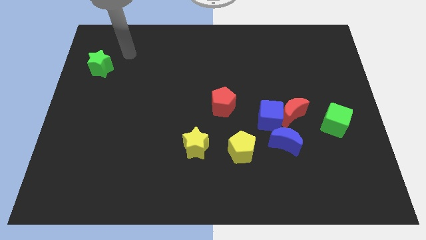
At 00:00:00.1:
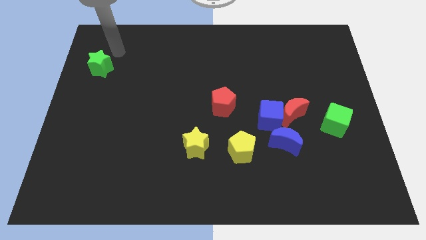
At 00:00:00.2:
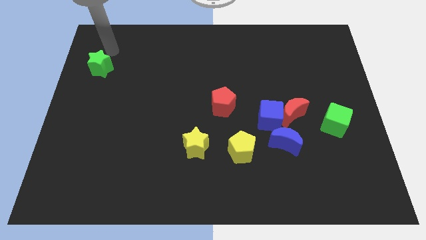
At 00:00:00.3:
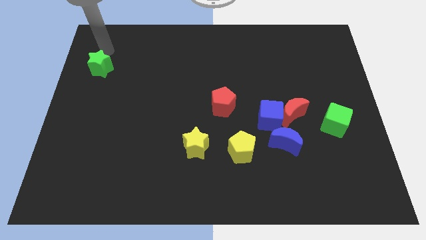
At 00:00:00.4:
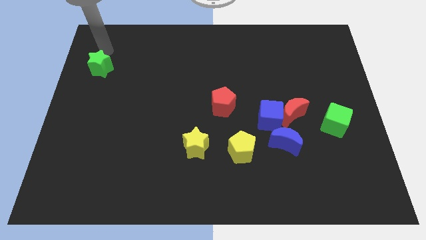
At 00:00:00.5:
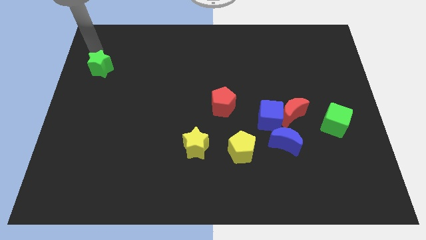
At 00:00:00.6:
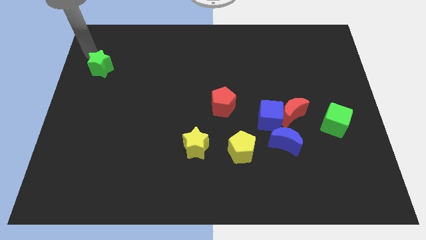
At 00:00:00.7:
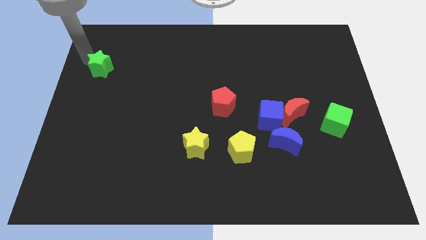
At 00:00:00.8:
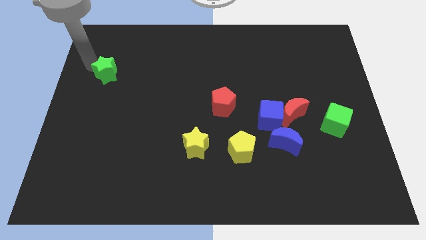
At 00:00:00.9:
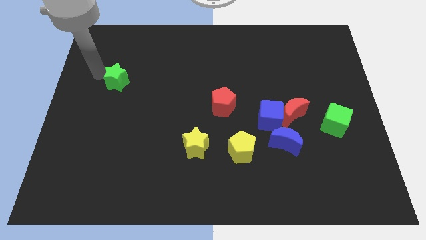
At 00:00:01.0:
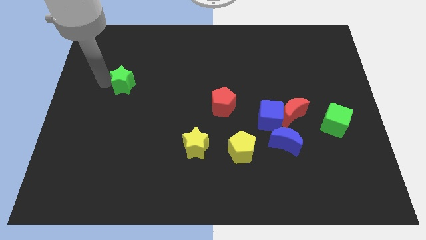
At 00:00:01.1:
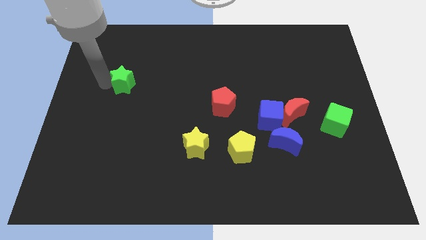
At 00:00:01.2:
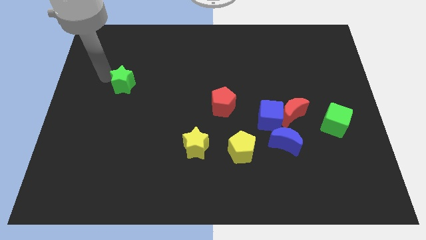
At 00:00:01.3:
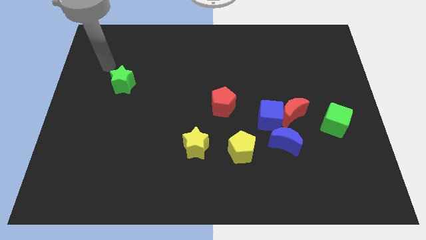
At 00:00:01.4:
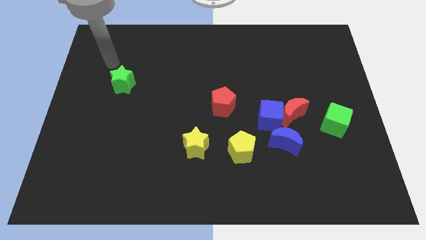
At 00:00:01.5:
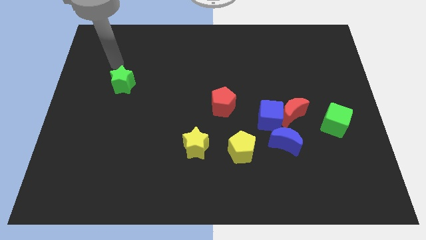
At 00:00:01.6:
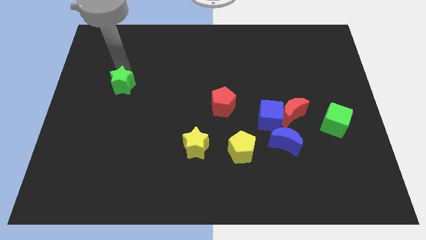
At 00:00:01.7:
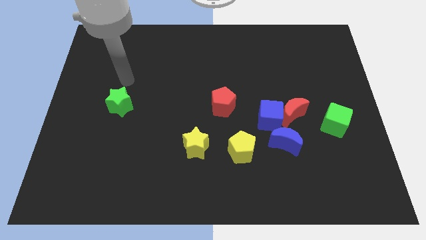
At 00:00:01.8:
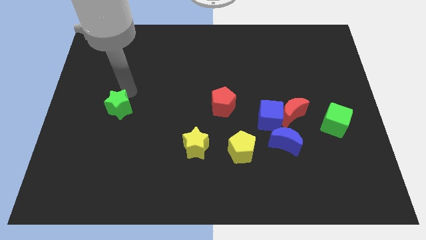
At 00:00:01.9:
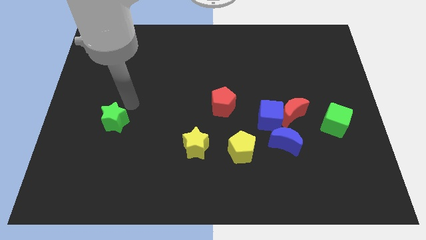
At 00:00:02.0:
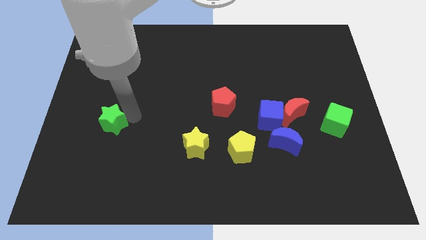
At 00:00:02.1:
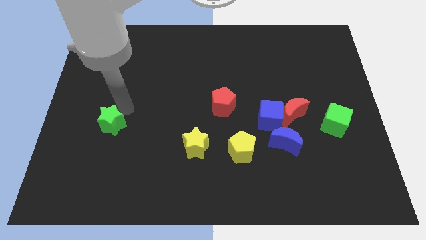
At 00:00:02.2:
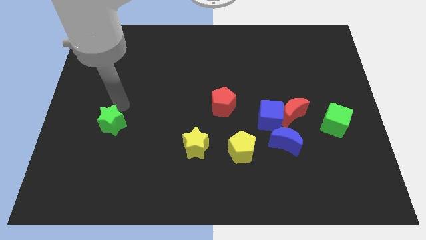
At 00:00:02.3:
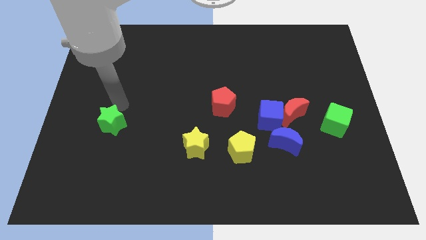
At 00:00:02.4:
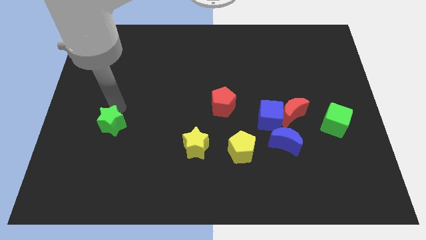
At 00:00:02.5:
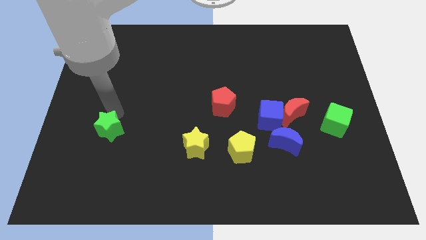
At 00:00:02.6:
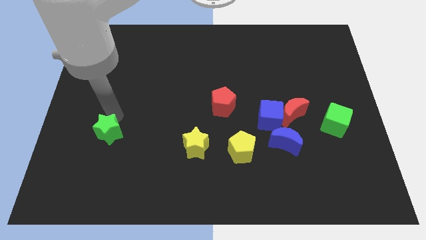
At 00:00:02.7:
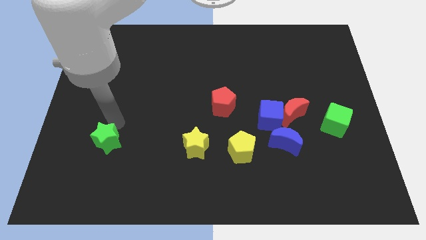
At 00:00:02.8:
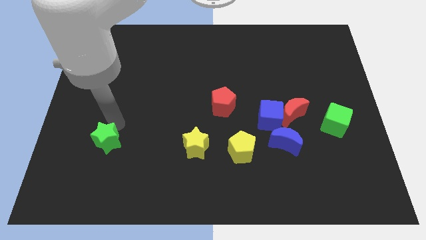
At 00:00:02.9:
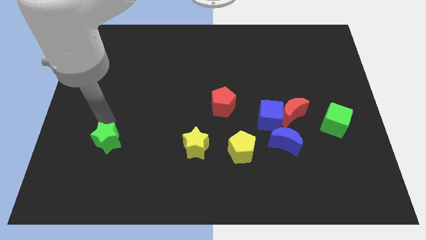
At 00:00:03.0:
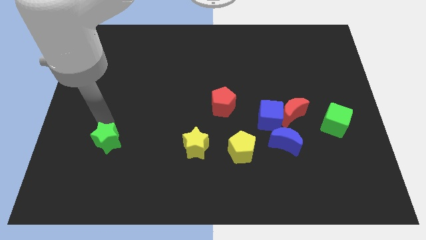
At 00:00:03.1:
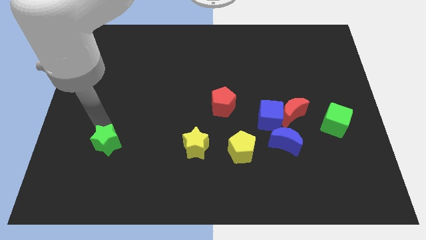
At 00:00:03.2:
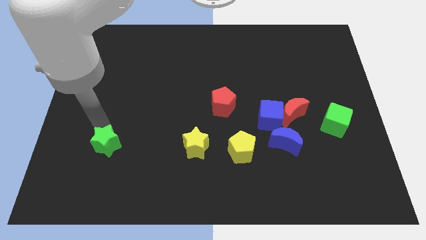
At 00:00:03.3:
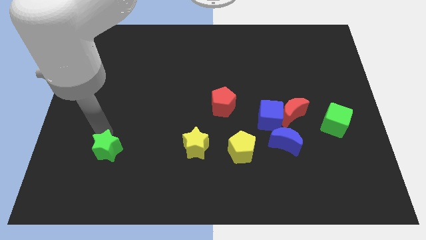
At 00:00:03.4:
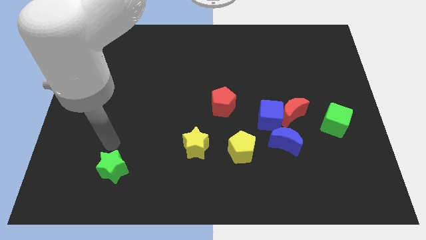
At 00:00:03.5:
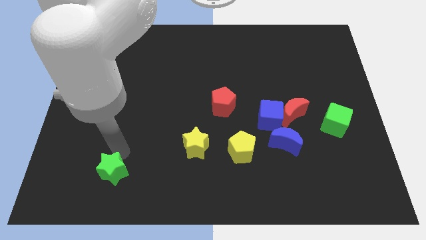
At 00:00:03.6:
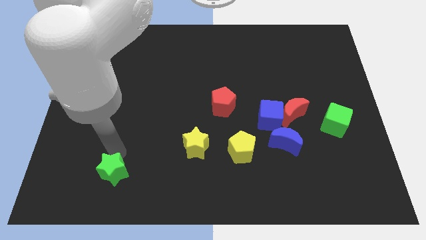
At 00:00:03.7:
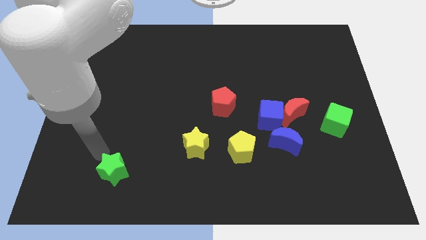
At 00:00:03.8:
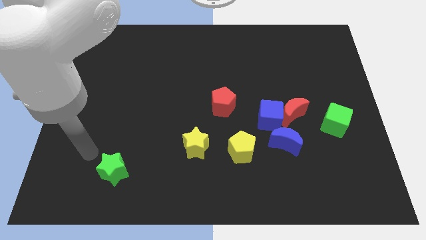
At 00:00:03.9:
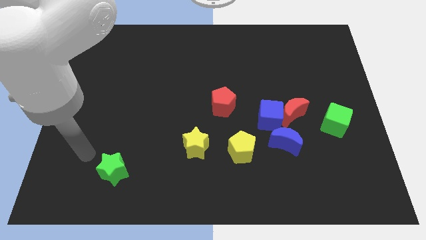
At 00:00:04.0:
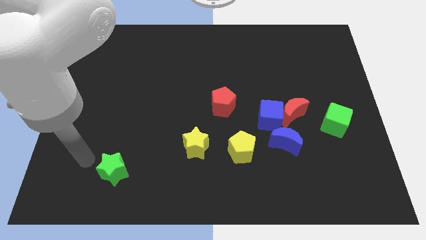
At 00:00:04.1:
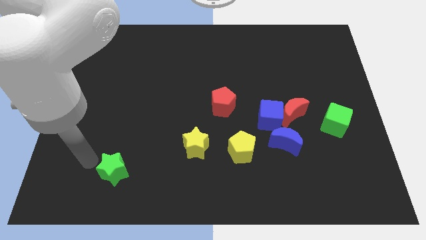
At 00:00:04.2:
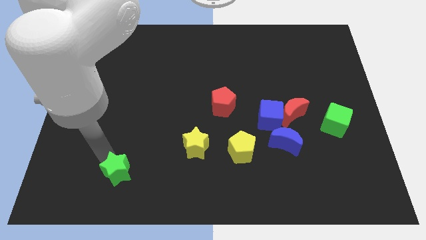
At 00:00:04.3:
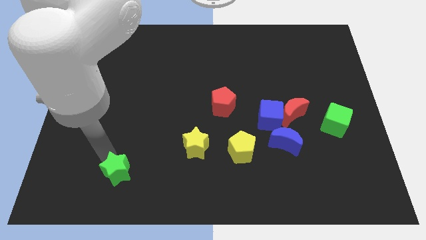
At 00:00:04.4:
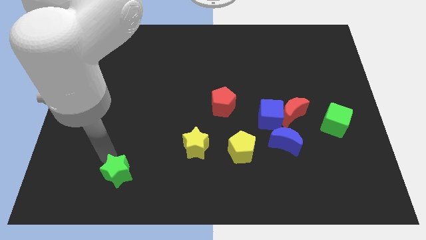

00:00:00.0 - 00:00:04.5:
push the green star downwards the board

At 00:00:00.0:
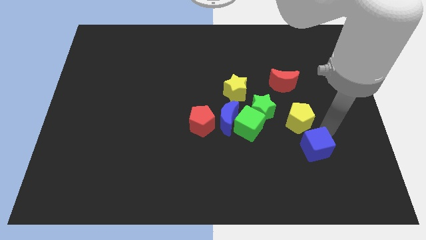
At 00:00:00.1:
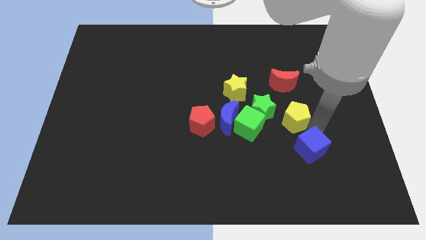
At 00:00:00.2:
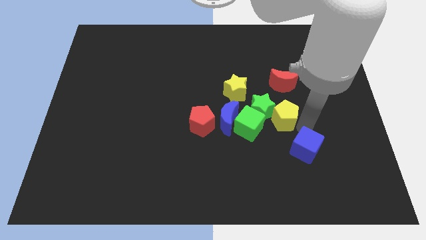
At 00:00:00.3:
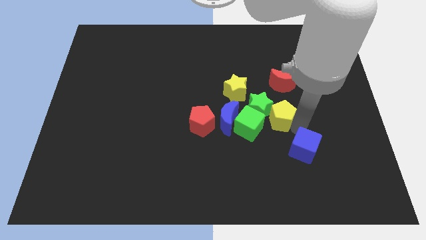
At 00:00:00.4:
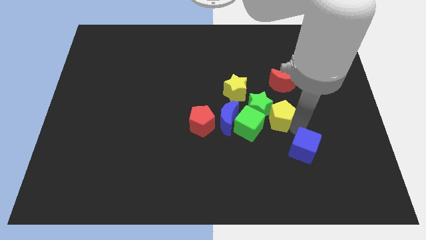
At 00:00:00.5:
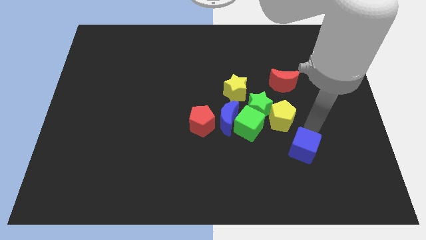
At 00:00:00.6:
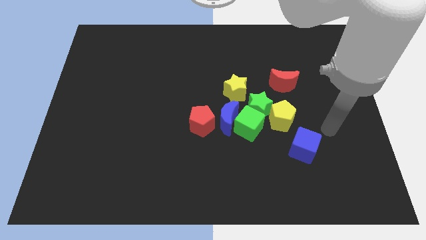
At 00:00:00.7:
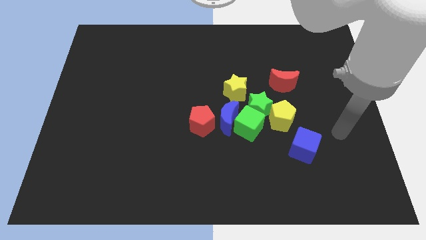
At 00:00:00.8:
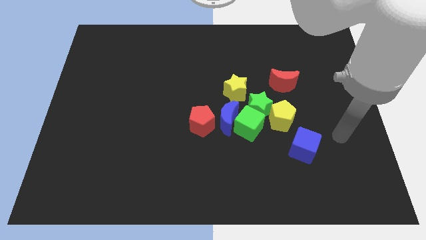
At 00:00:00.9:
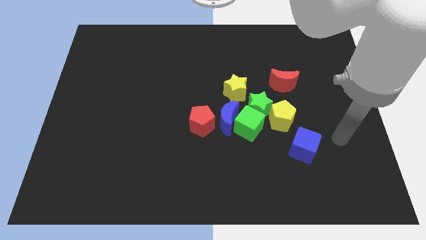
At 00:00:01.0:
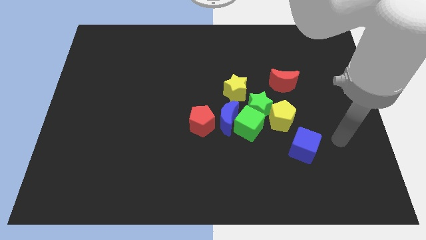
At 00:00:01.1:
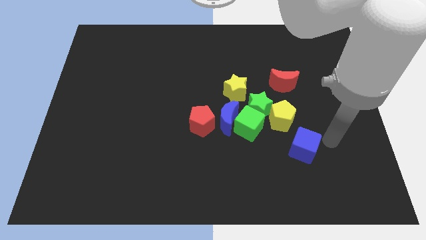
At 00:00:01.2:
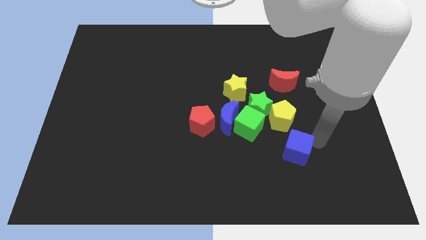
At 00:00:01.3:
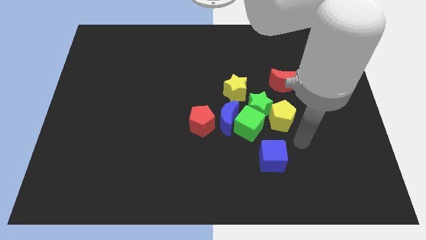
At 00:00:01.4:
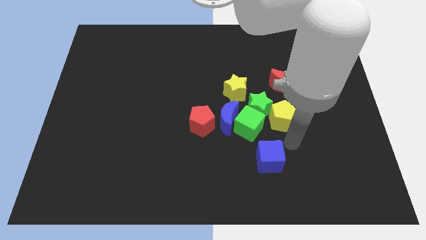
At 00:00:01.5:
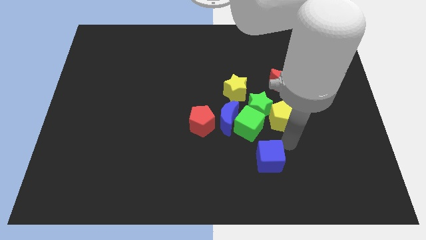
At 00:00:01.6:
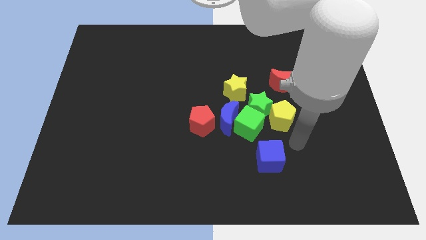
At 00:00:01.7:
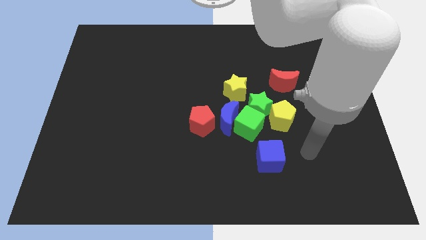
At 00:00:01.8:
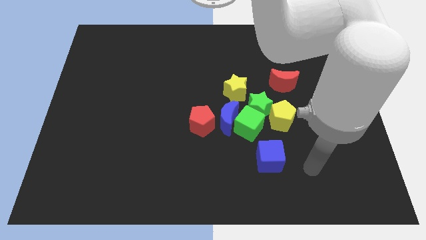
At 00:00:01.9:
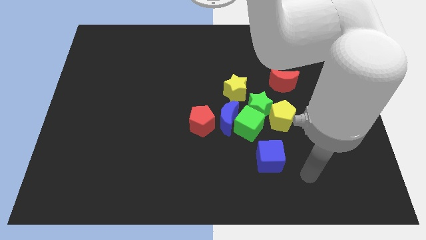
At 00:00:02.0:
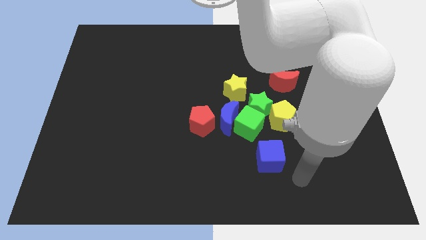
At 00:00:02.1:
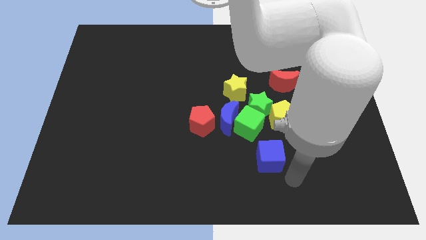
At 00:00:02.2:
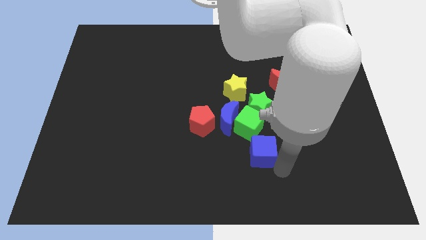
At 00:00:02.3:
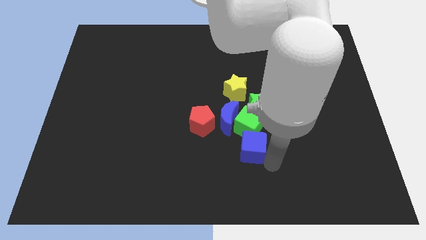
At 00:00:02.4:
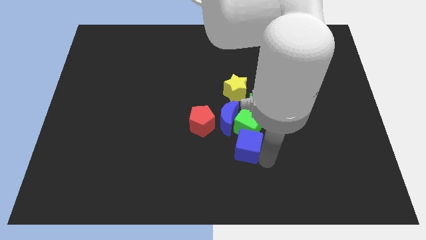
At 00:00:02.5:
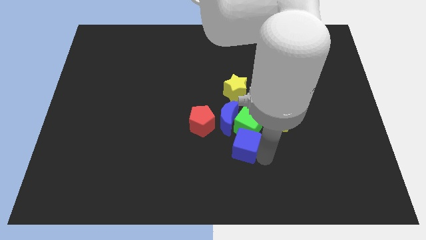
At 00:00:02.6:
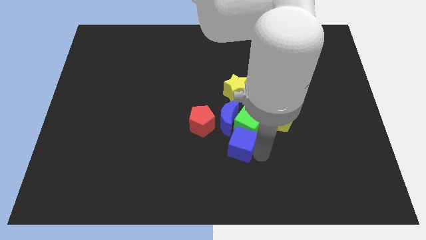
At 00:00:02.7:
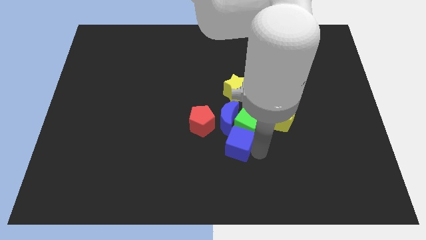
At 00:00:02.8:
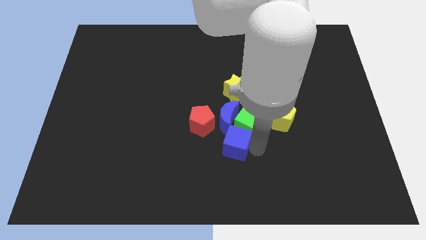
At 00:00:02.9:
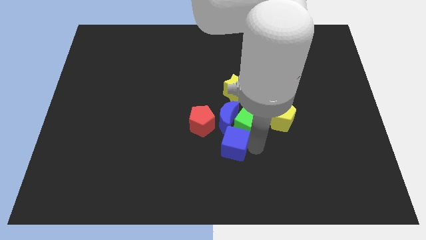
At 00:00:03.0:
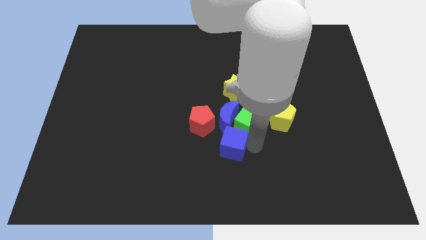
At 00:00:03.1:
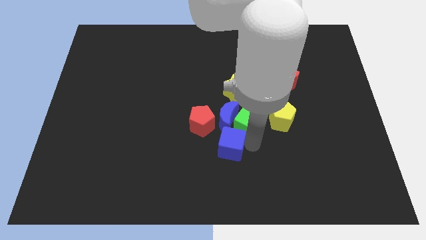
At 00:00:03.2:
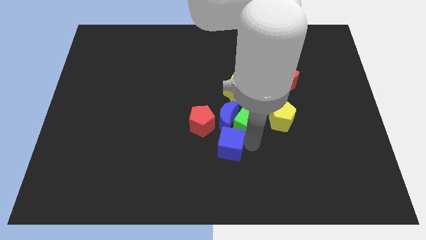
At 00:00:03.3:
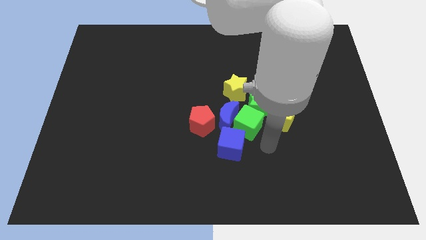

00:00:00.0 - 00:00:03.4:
place the blue cube below the blue moon

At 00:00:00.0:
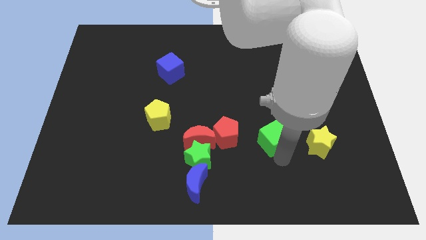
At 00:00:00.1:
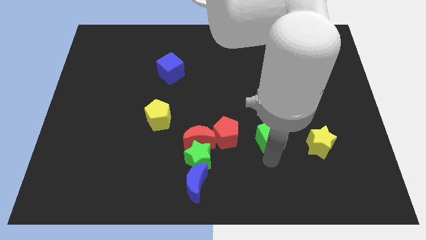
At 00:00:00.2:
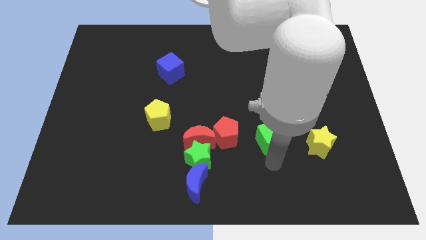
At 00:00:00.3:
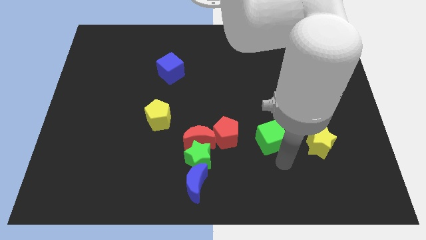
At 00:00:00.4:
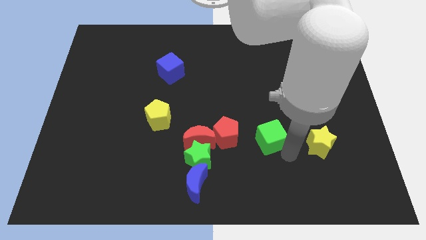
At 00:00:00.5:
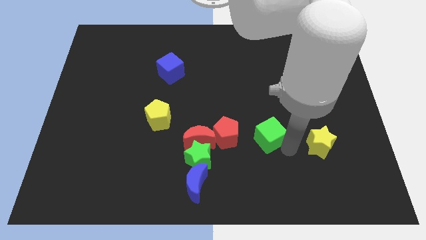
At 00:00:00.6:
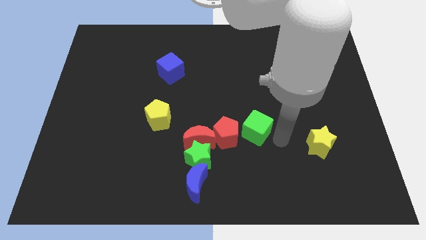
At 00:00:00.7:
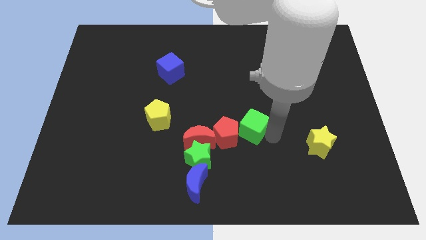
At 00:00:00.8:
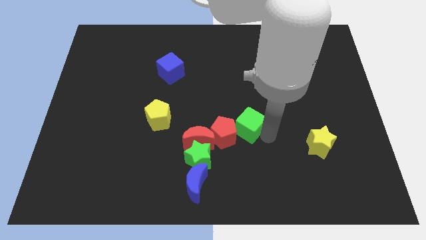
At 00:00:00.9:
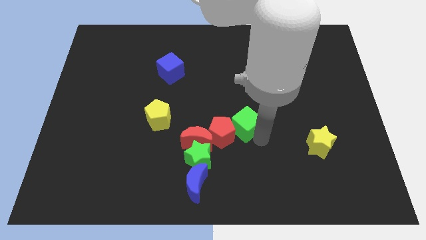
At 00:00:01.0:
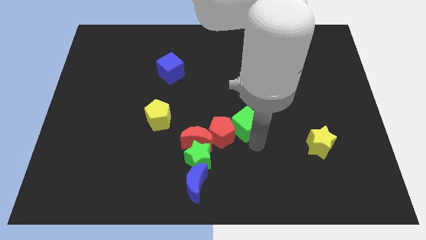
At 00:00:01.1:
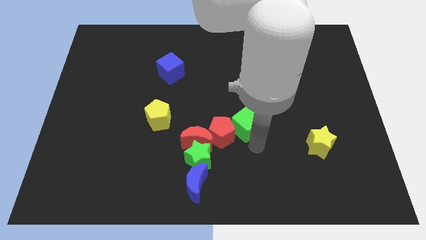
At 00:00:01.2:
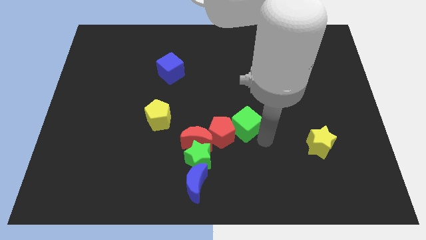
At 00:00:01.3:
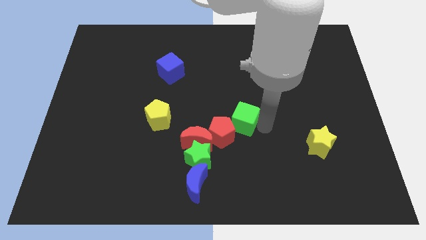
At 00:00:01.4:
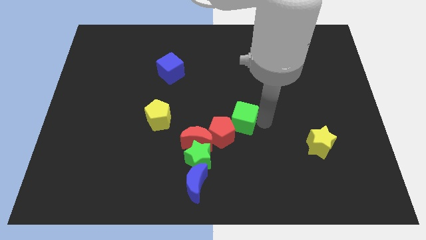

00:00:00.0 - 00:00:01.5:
put green cube into the red pentagon
